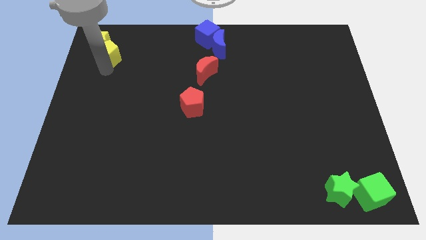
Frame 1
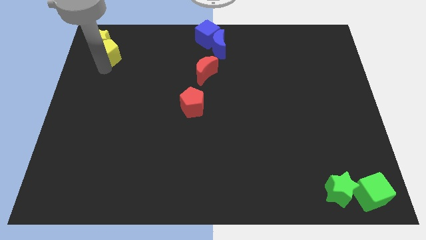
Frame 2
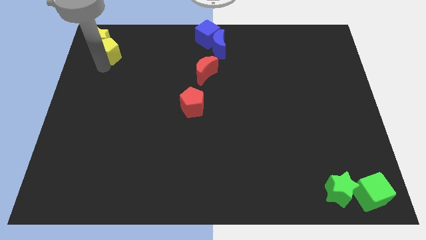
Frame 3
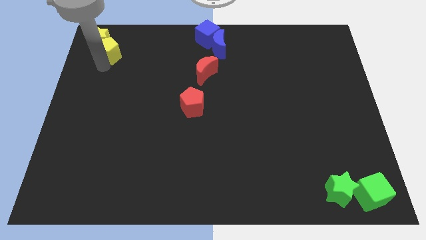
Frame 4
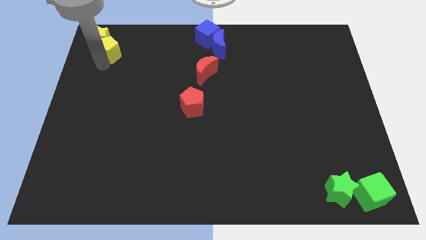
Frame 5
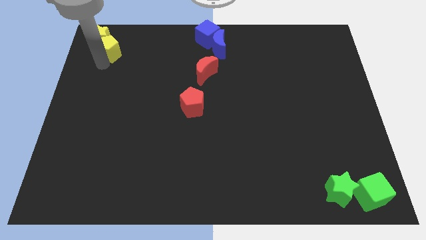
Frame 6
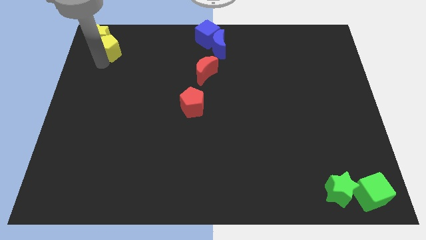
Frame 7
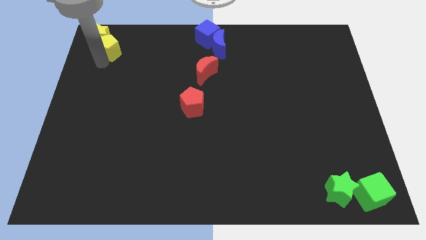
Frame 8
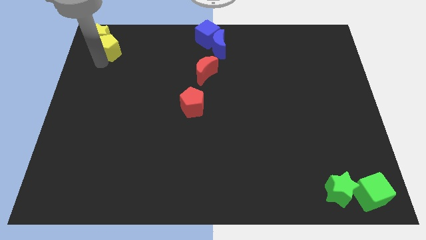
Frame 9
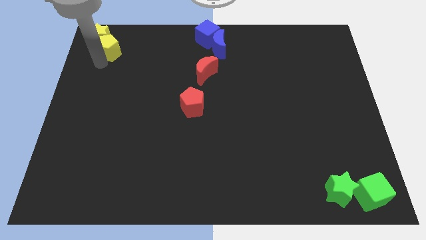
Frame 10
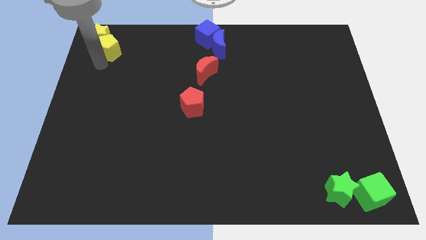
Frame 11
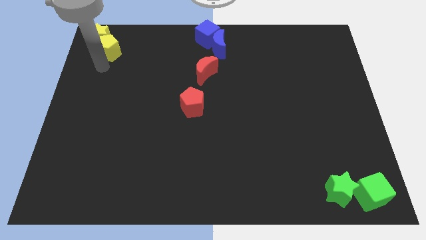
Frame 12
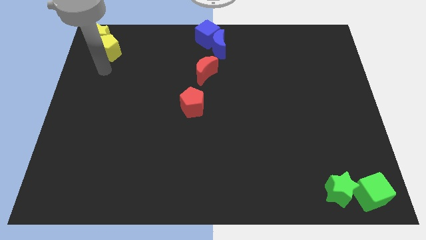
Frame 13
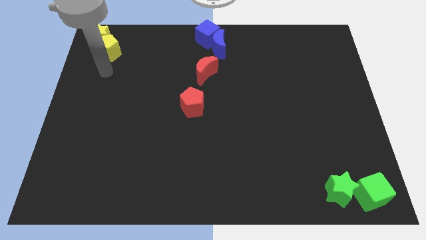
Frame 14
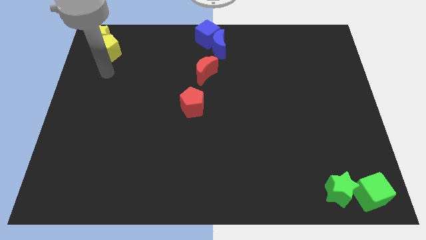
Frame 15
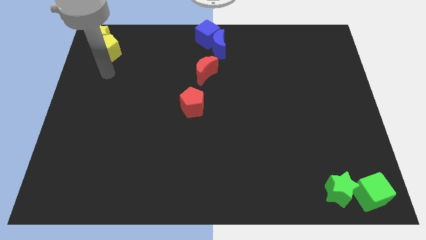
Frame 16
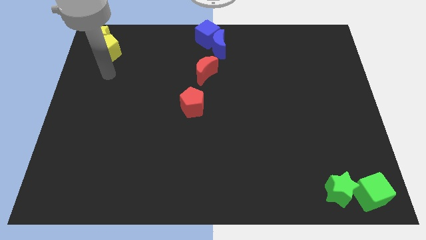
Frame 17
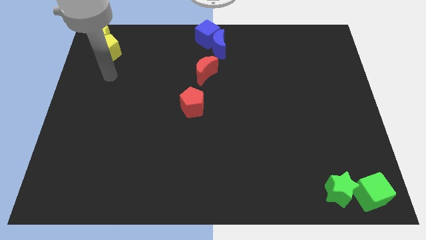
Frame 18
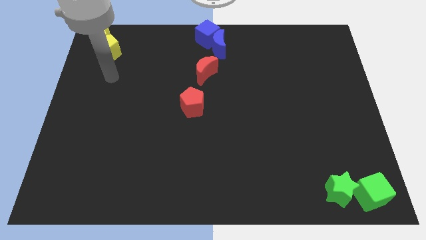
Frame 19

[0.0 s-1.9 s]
move yellow pentagon and yellow star towards up

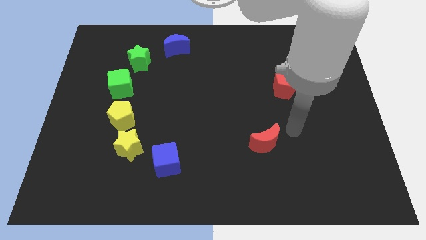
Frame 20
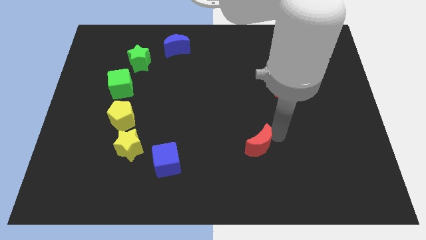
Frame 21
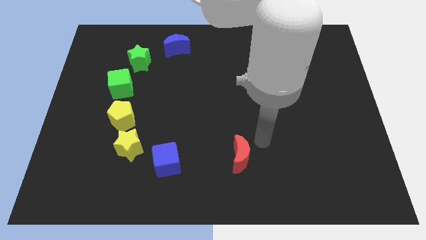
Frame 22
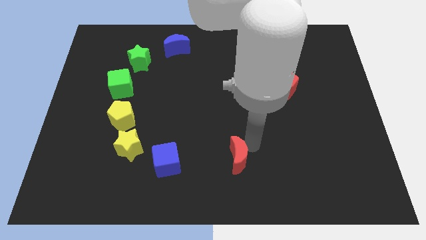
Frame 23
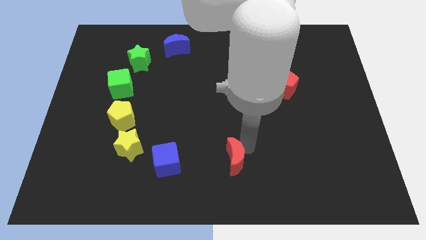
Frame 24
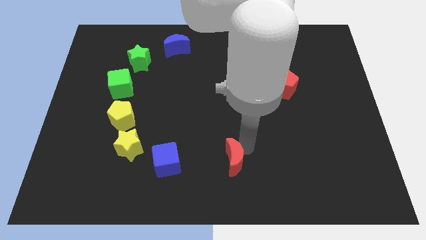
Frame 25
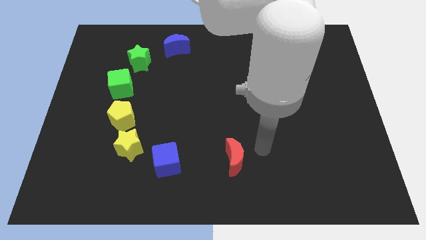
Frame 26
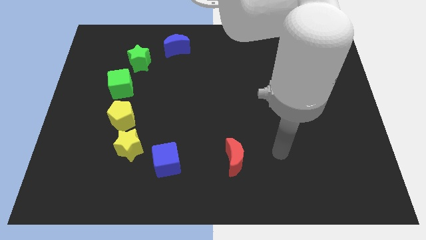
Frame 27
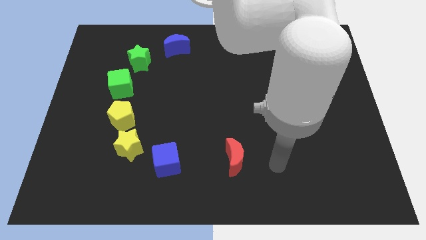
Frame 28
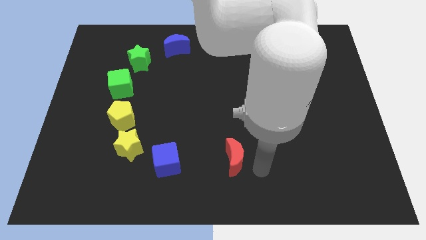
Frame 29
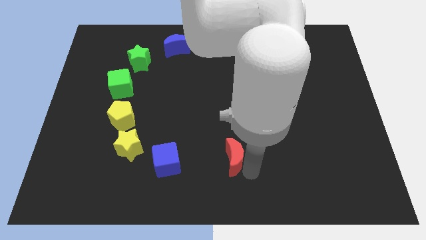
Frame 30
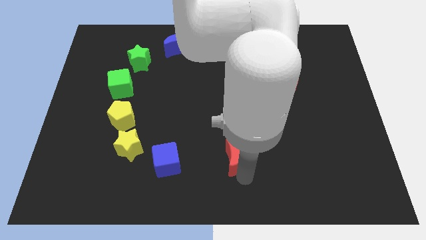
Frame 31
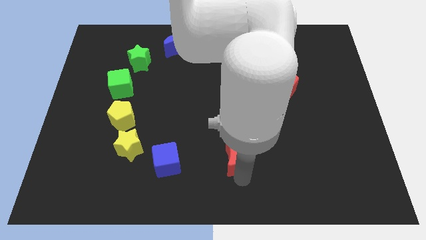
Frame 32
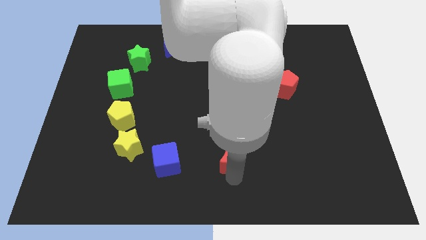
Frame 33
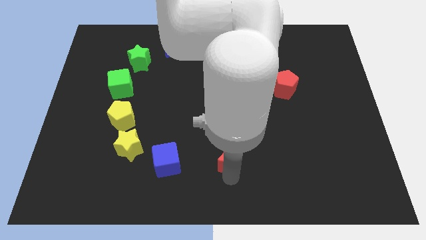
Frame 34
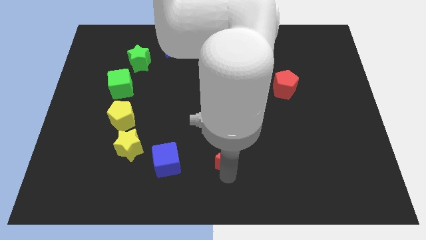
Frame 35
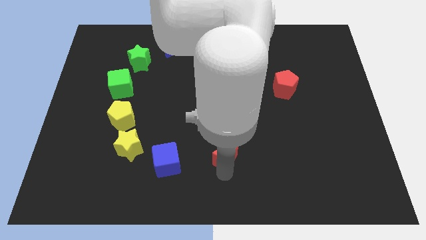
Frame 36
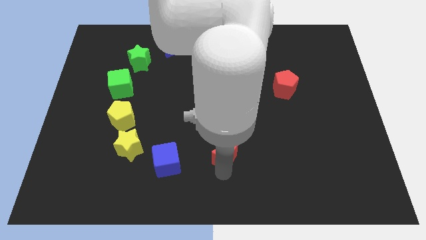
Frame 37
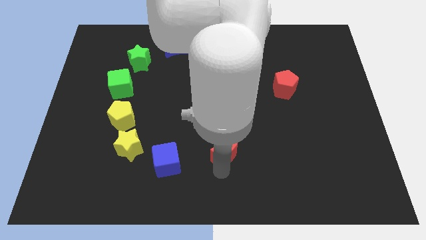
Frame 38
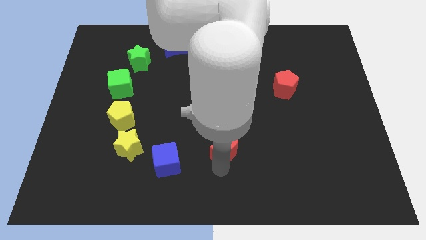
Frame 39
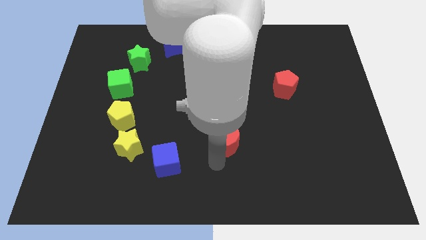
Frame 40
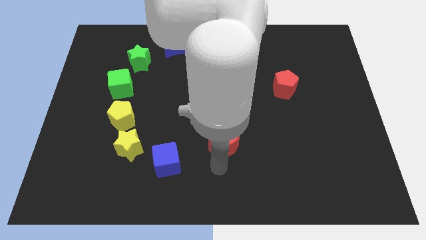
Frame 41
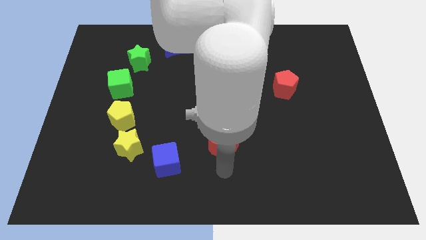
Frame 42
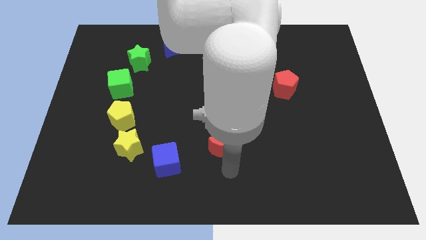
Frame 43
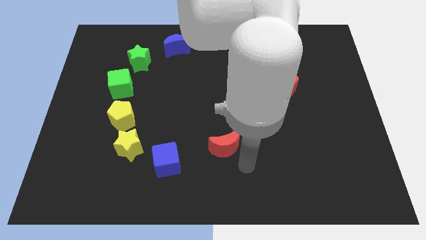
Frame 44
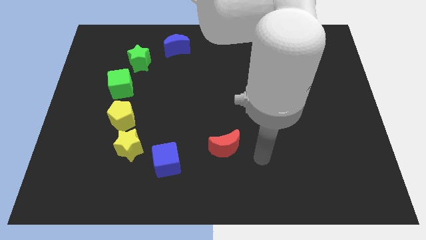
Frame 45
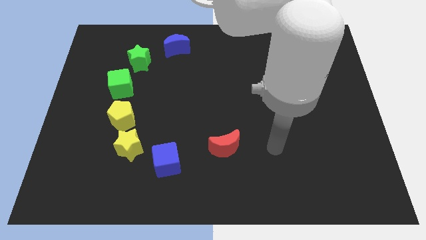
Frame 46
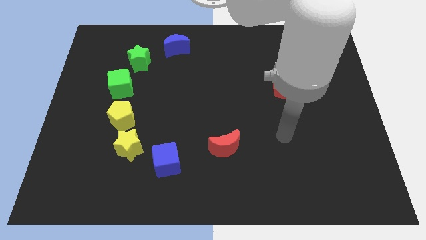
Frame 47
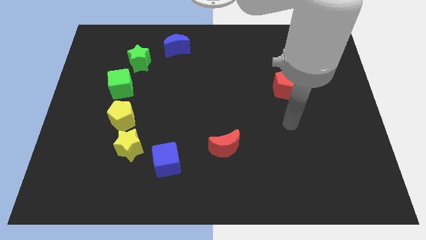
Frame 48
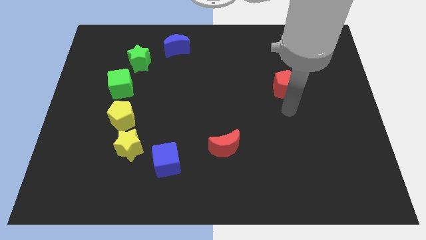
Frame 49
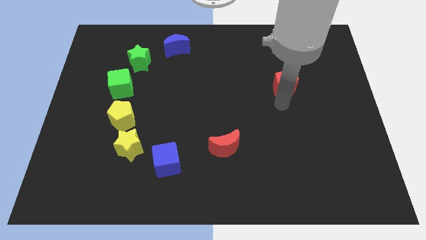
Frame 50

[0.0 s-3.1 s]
drag red moon towards blue cube

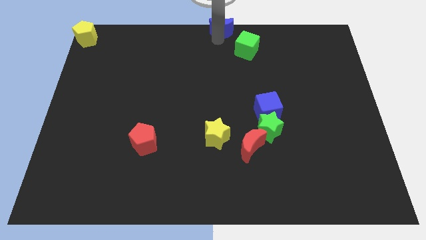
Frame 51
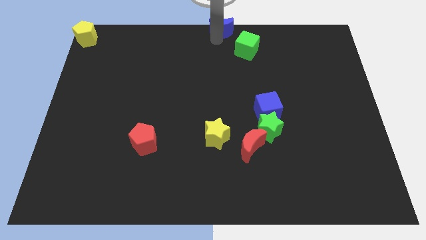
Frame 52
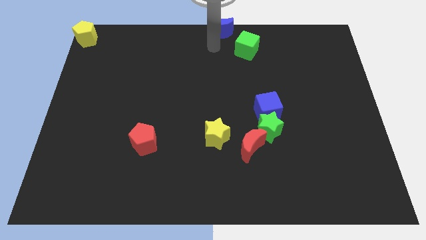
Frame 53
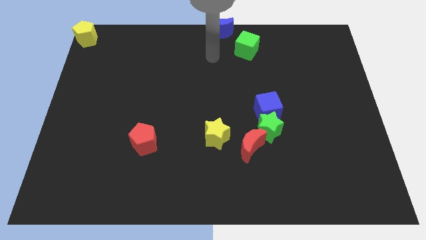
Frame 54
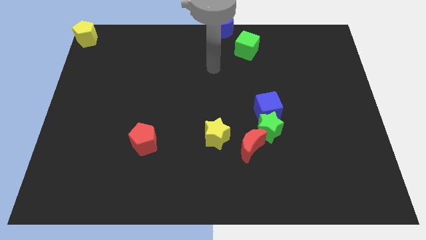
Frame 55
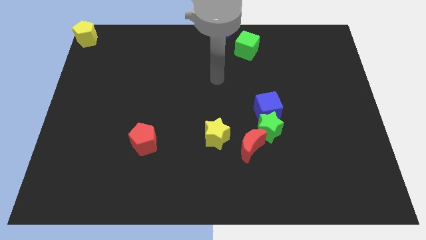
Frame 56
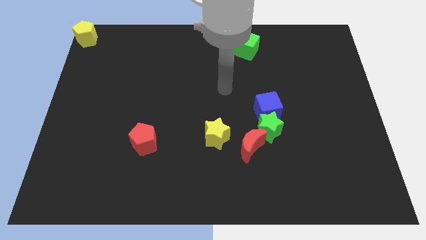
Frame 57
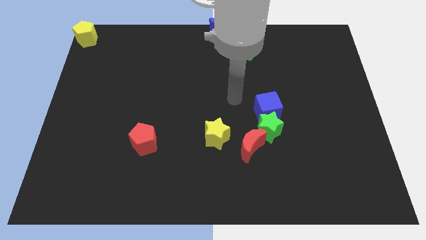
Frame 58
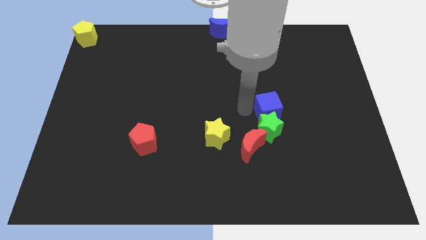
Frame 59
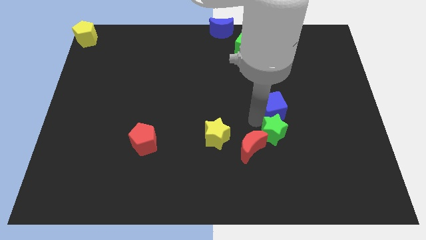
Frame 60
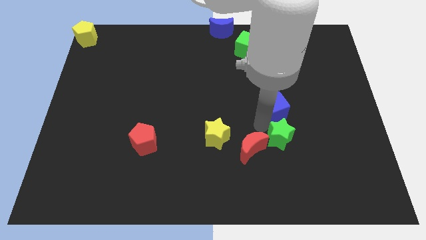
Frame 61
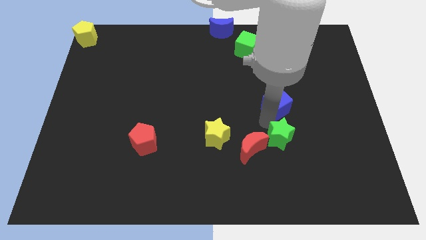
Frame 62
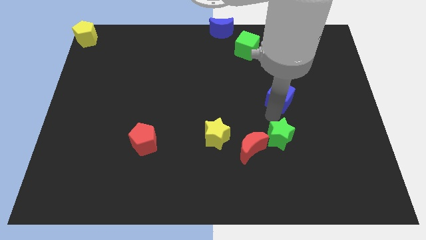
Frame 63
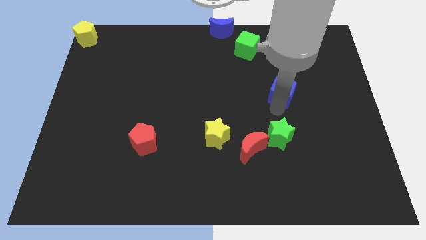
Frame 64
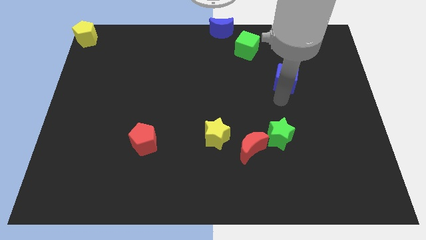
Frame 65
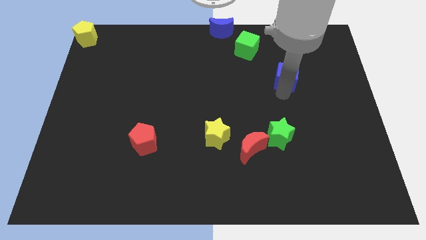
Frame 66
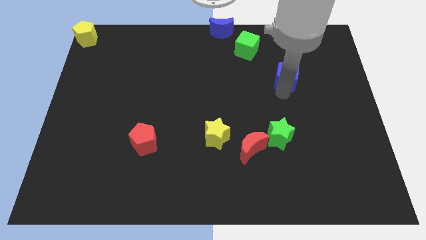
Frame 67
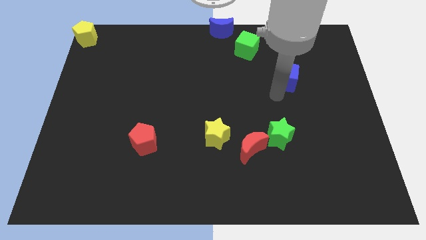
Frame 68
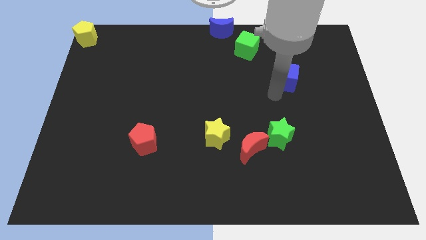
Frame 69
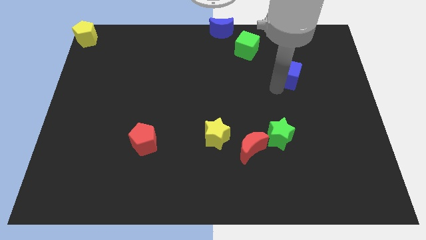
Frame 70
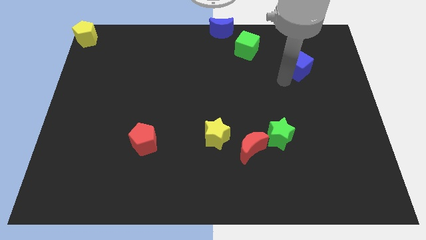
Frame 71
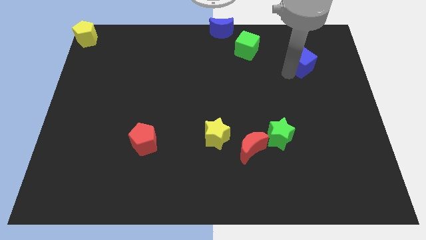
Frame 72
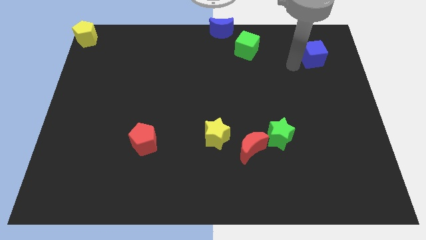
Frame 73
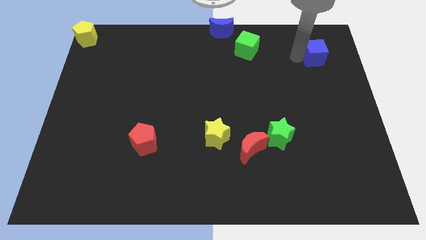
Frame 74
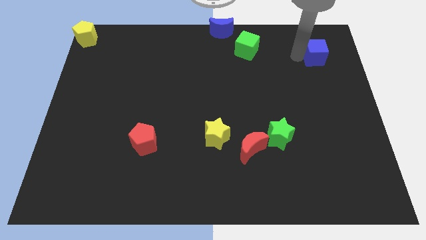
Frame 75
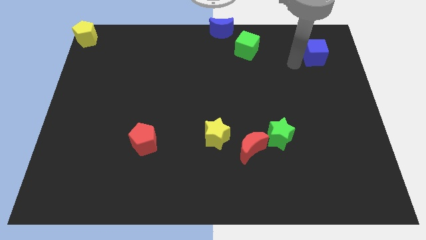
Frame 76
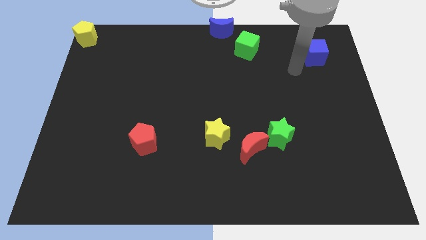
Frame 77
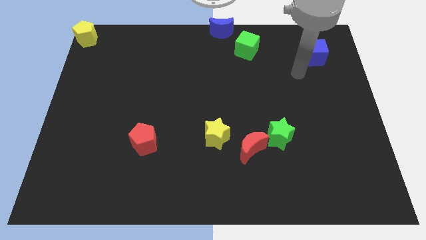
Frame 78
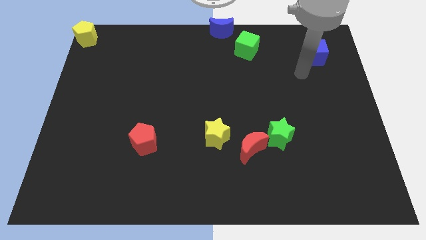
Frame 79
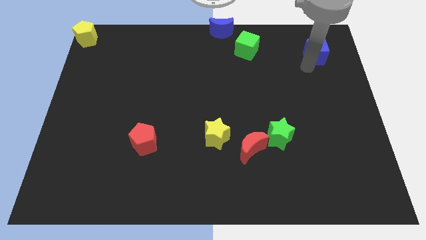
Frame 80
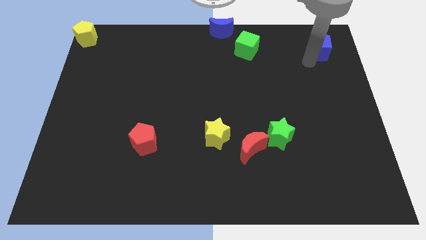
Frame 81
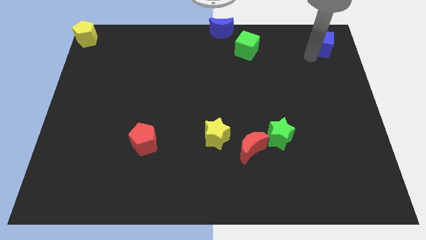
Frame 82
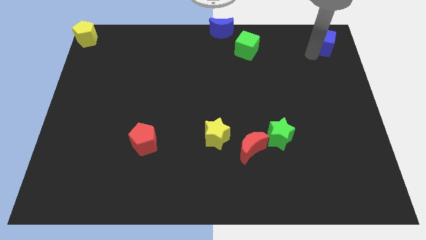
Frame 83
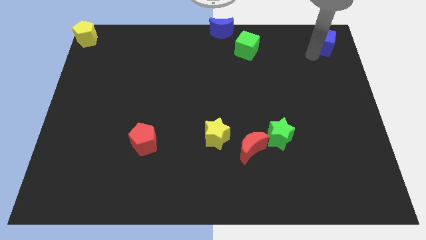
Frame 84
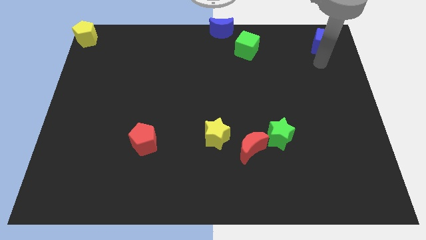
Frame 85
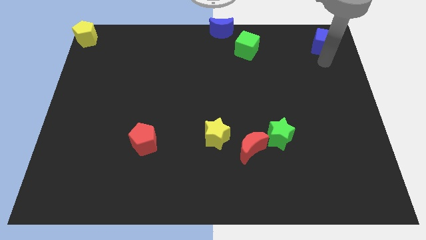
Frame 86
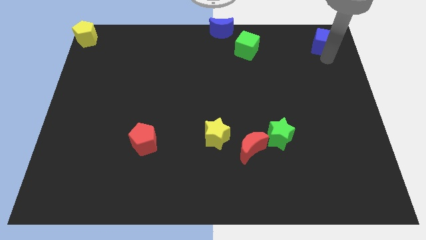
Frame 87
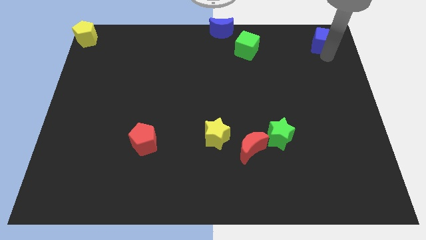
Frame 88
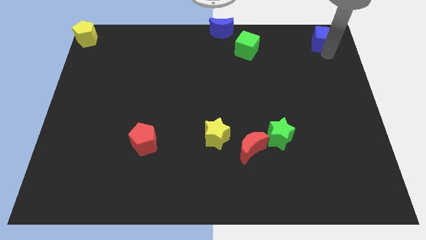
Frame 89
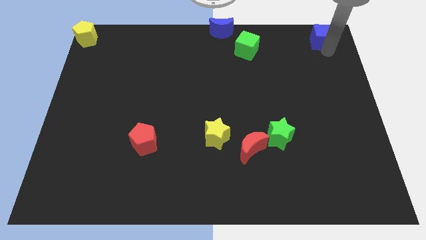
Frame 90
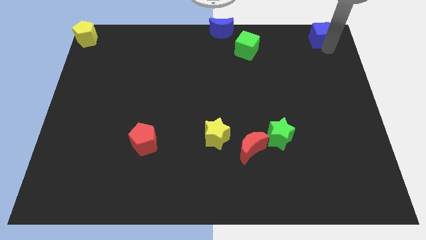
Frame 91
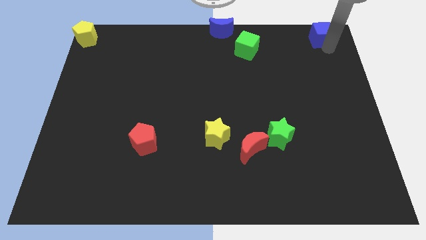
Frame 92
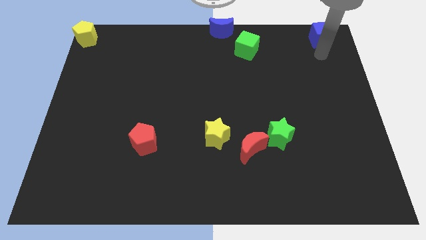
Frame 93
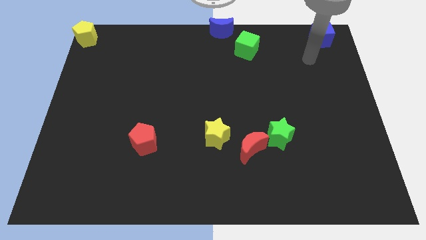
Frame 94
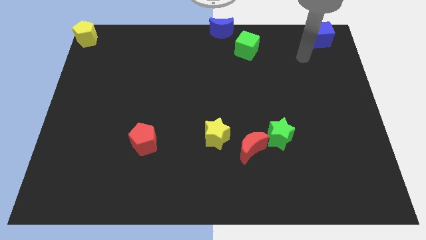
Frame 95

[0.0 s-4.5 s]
move the blue cube to the top right
